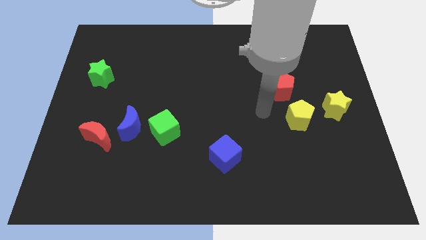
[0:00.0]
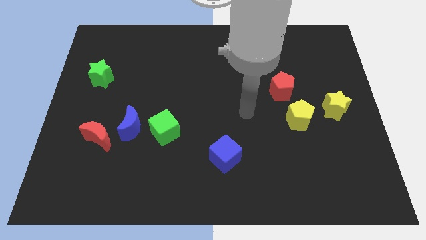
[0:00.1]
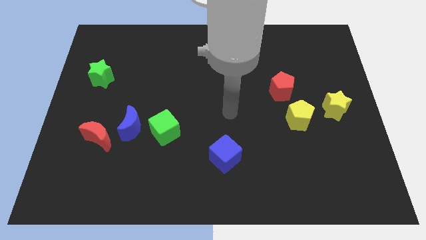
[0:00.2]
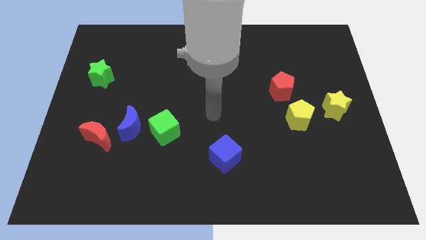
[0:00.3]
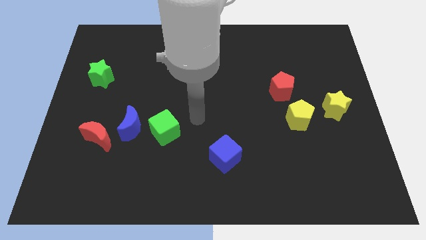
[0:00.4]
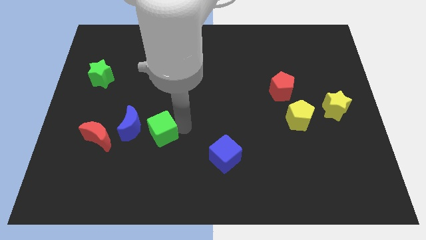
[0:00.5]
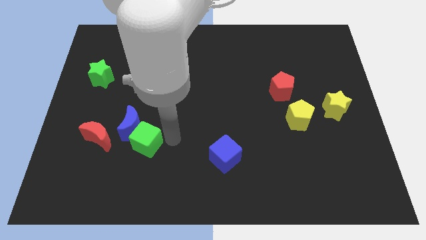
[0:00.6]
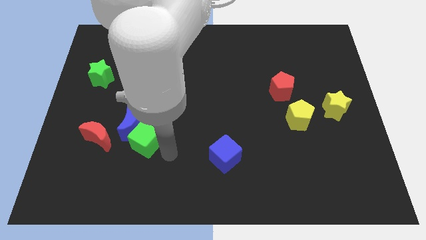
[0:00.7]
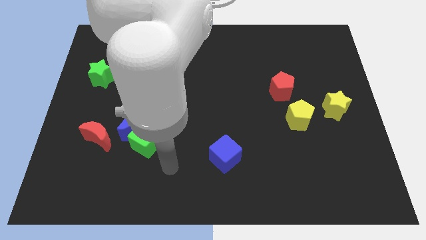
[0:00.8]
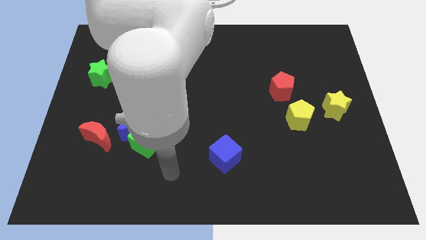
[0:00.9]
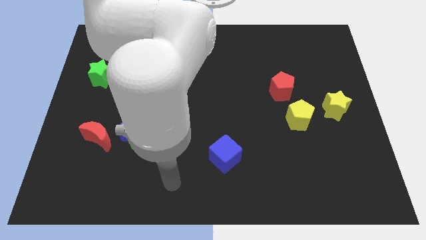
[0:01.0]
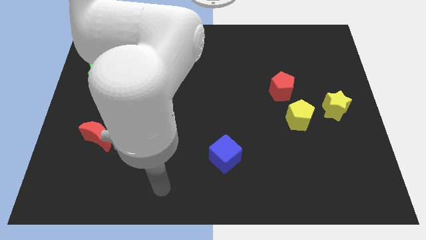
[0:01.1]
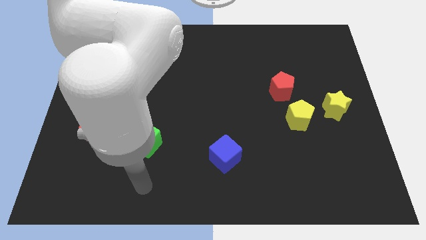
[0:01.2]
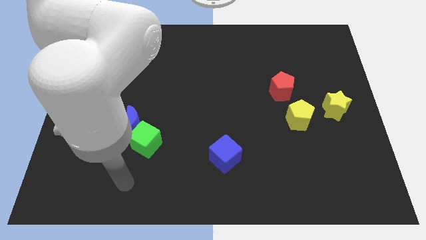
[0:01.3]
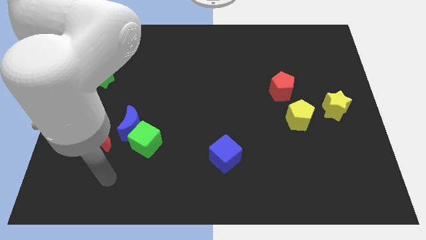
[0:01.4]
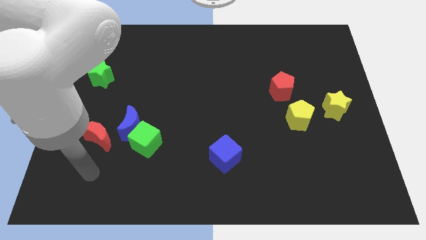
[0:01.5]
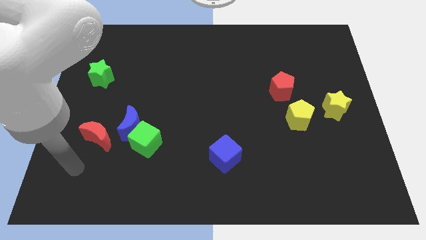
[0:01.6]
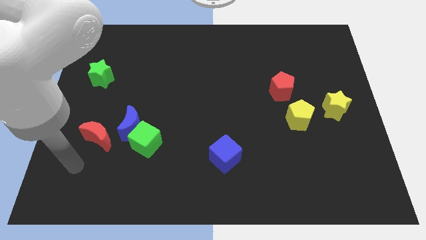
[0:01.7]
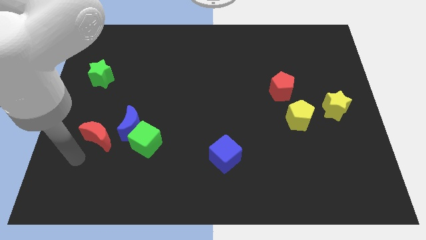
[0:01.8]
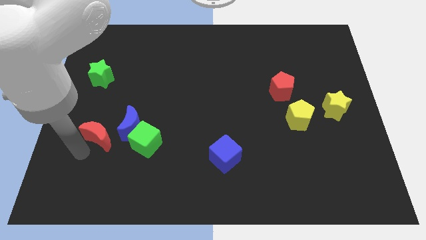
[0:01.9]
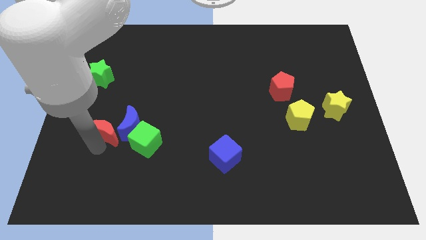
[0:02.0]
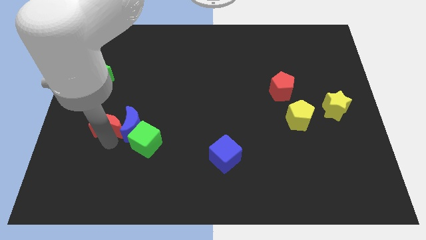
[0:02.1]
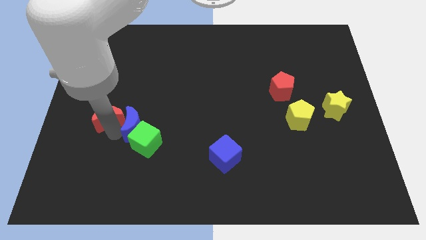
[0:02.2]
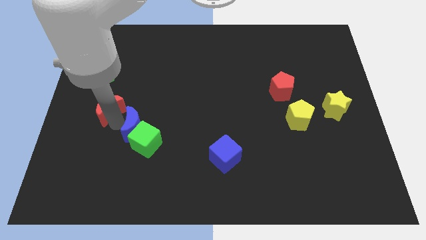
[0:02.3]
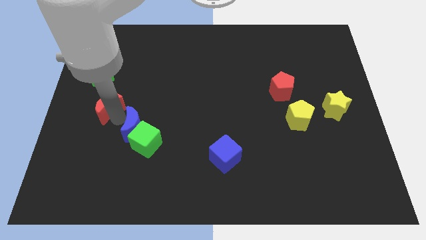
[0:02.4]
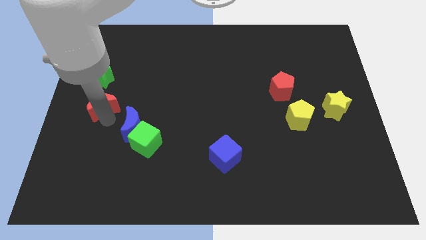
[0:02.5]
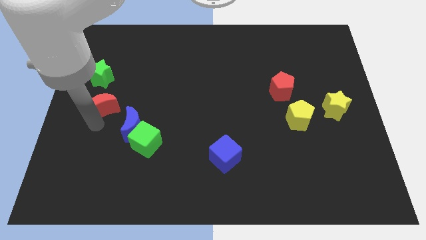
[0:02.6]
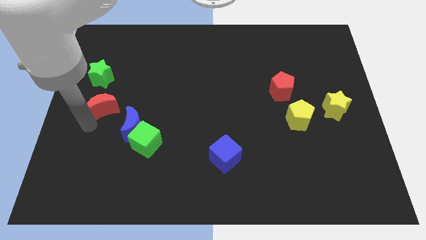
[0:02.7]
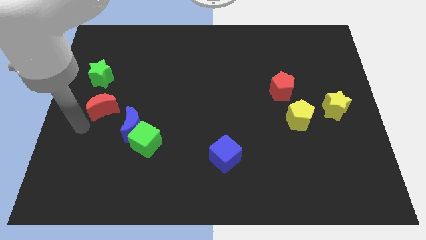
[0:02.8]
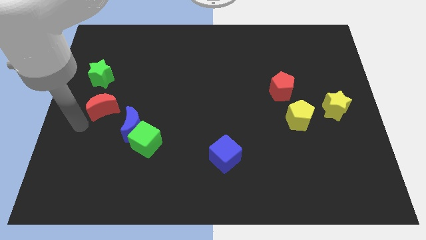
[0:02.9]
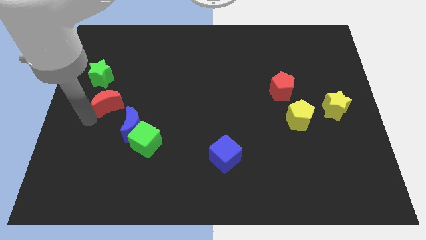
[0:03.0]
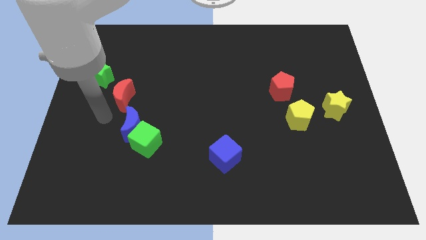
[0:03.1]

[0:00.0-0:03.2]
place the green cube and the red crescent on either sides of the blue crescent

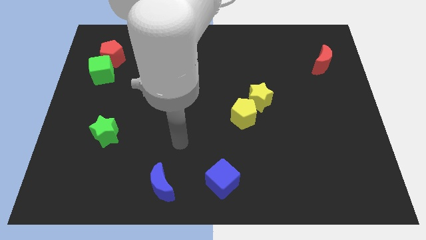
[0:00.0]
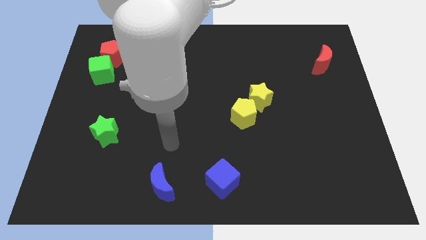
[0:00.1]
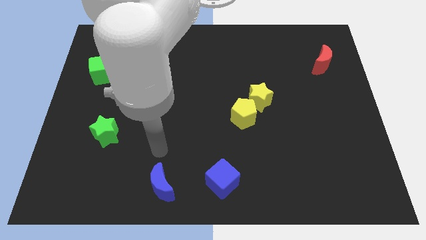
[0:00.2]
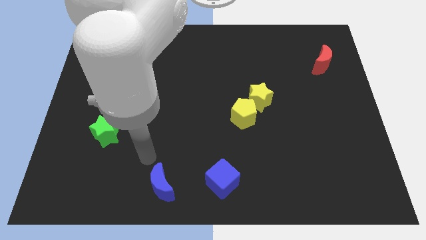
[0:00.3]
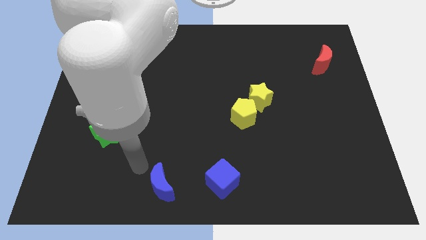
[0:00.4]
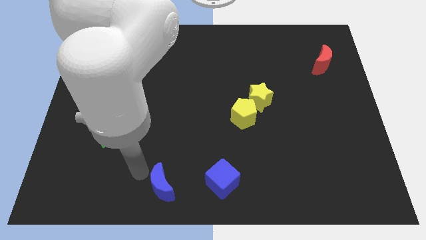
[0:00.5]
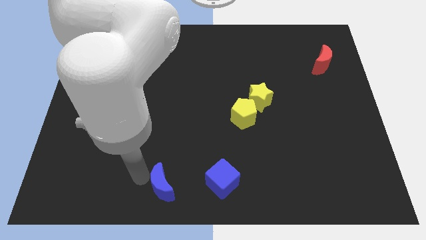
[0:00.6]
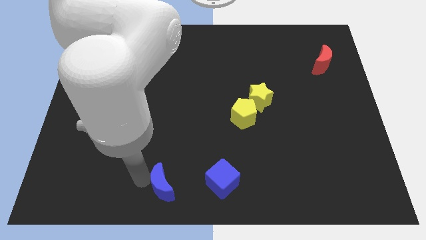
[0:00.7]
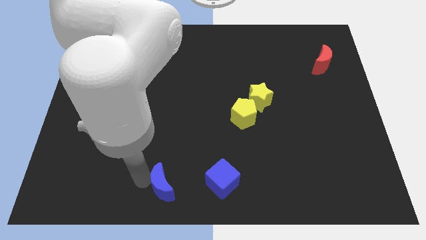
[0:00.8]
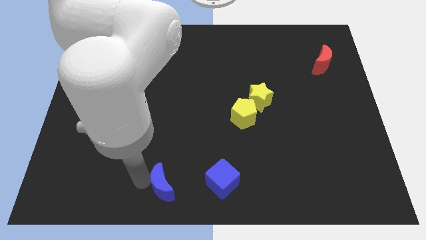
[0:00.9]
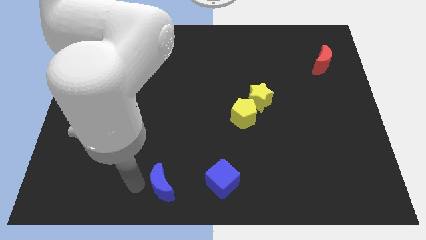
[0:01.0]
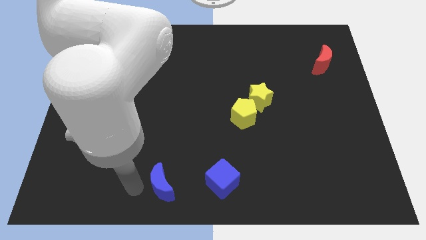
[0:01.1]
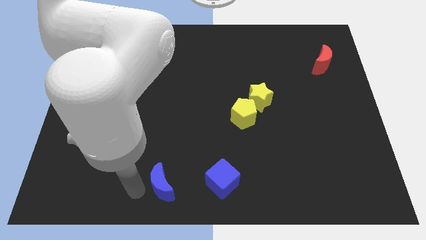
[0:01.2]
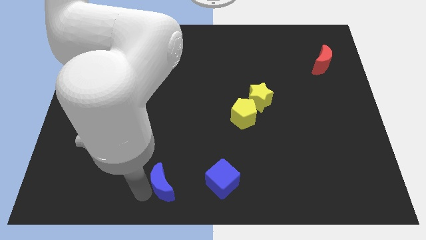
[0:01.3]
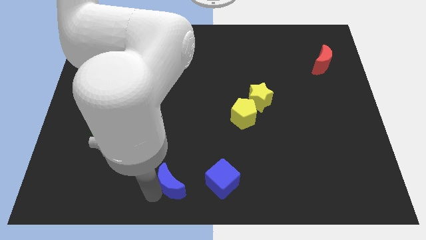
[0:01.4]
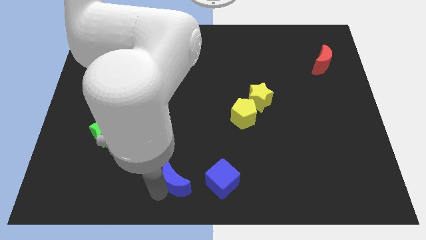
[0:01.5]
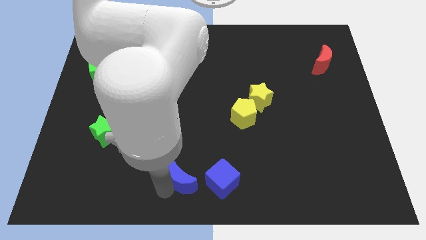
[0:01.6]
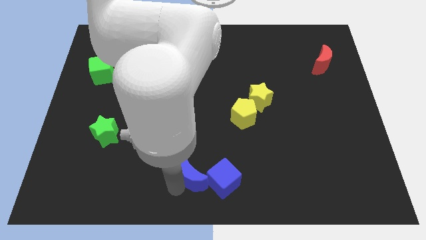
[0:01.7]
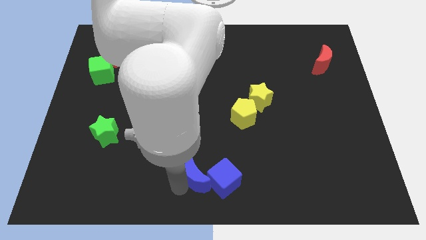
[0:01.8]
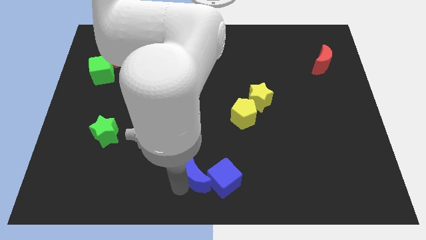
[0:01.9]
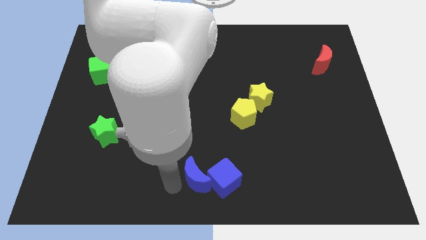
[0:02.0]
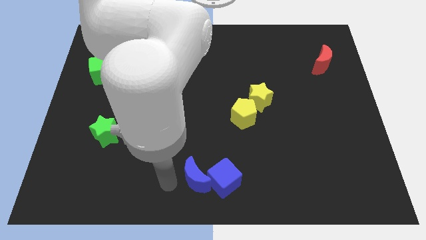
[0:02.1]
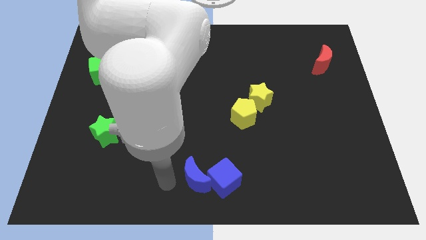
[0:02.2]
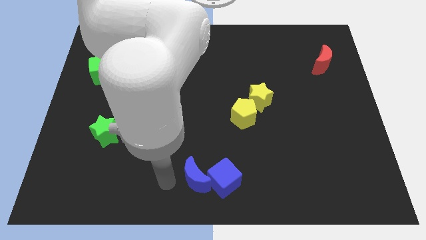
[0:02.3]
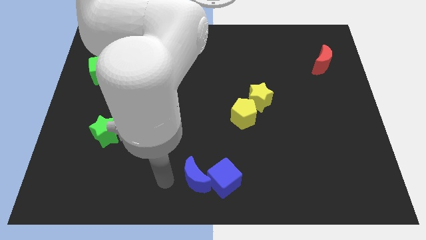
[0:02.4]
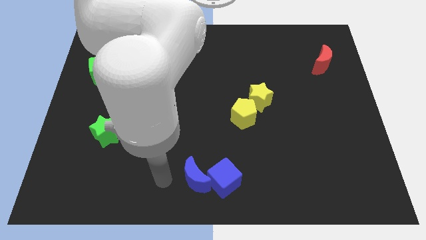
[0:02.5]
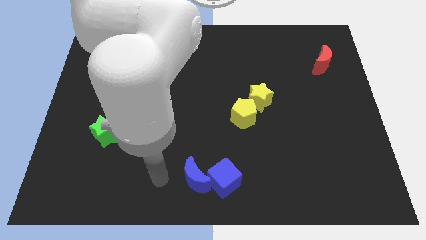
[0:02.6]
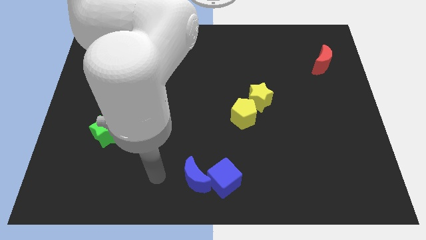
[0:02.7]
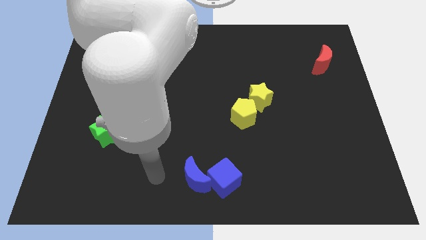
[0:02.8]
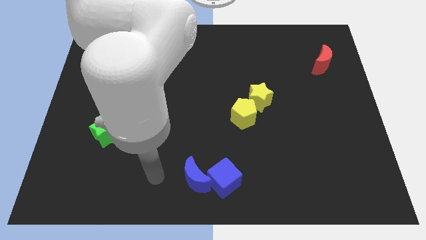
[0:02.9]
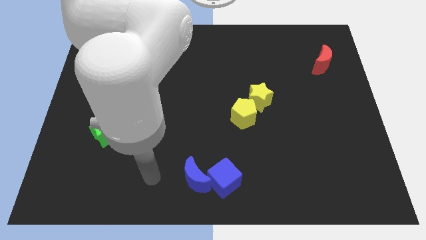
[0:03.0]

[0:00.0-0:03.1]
push blue moon into the blue cube

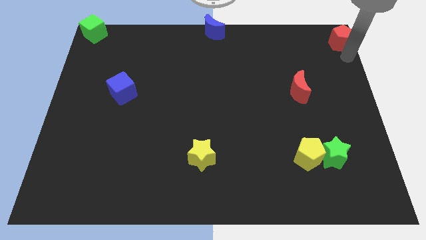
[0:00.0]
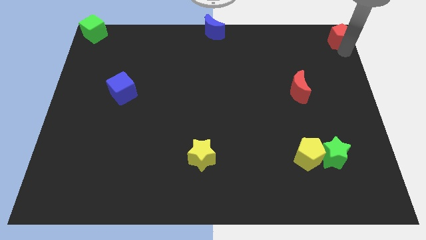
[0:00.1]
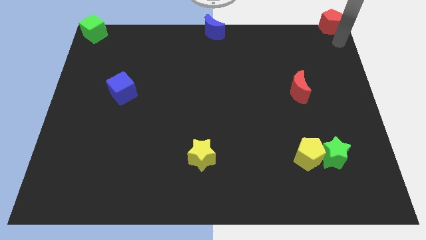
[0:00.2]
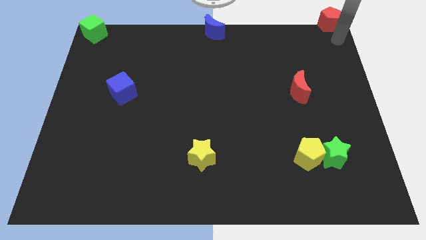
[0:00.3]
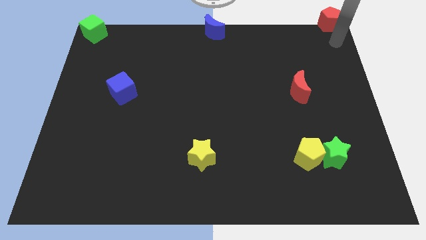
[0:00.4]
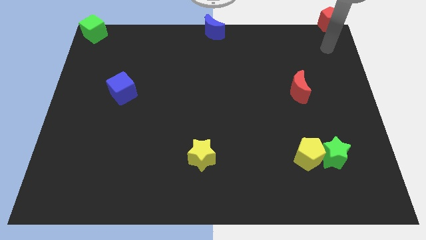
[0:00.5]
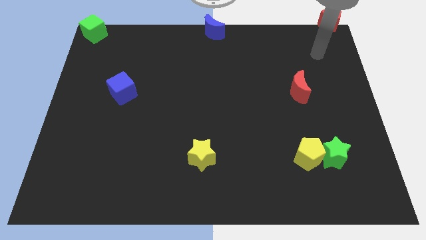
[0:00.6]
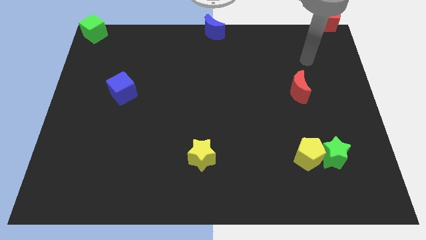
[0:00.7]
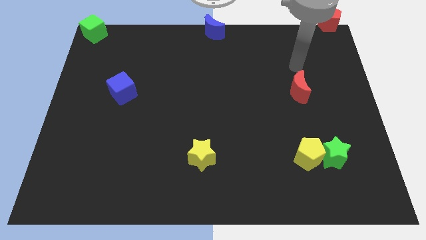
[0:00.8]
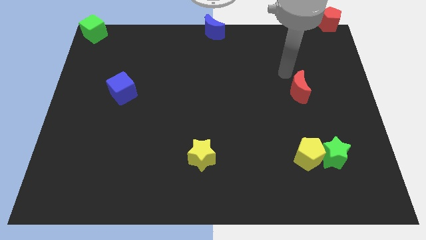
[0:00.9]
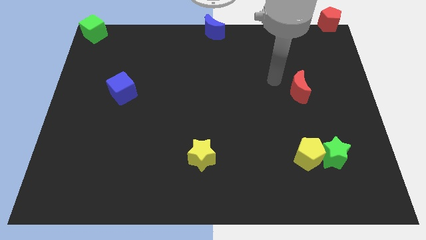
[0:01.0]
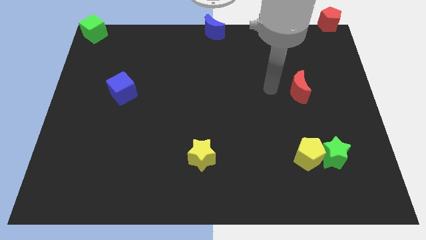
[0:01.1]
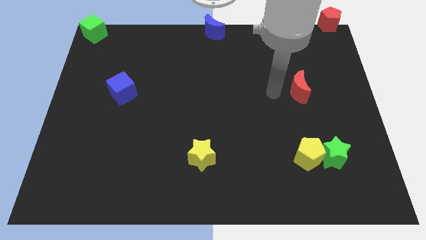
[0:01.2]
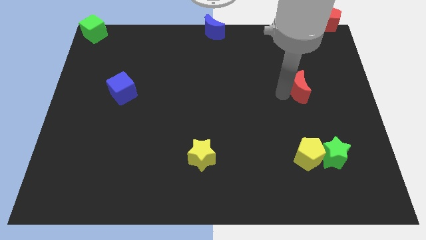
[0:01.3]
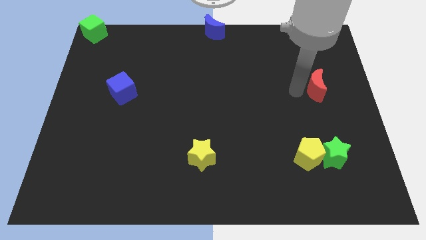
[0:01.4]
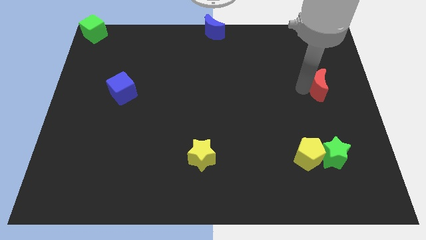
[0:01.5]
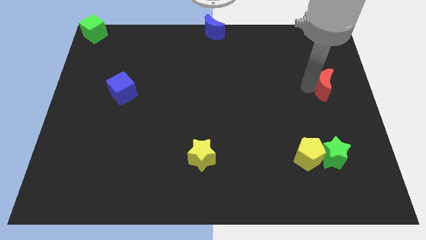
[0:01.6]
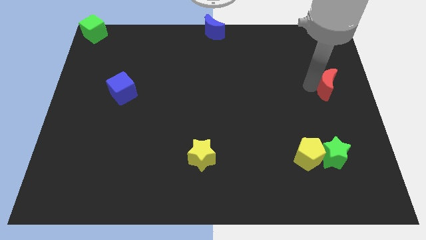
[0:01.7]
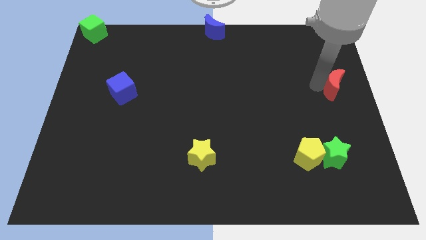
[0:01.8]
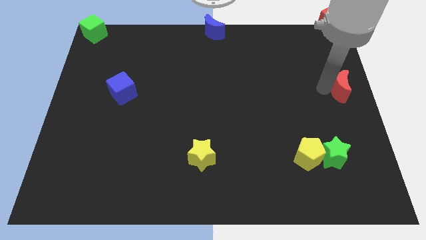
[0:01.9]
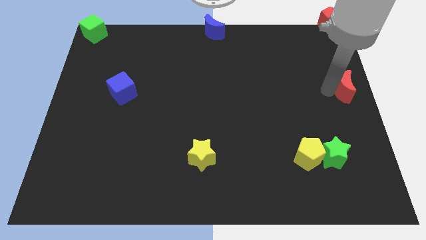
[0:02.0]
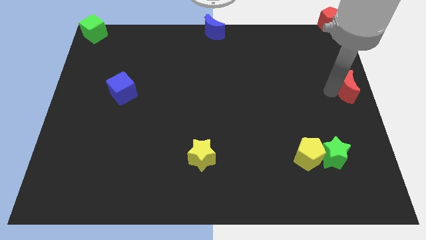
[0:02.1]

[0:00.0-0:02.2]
push red moon to the right centre of board

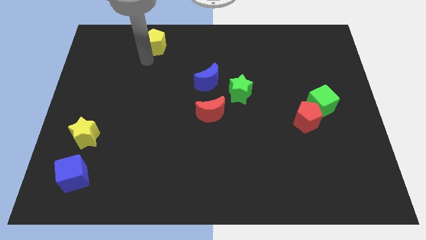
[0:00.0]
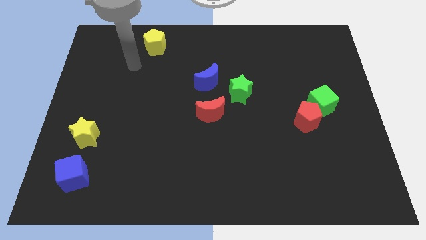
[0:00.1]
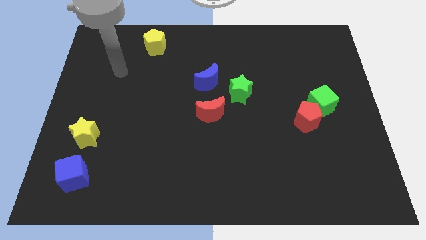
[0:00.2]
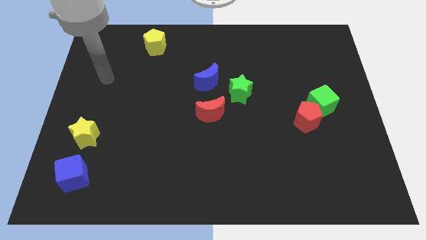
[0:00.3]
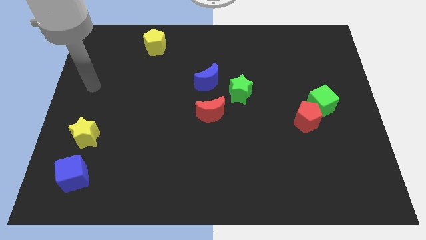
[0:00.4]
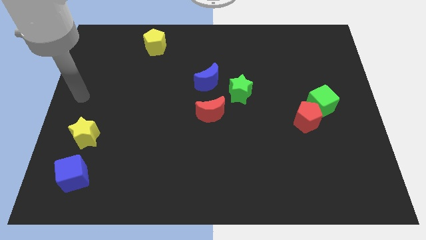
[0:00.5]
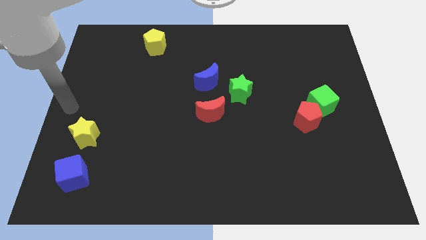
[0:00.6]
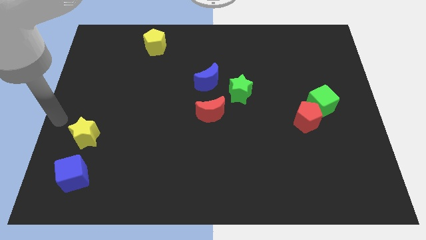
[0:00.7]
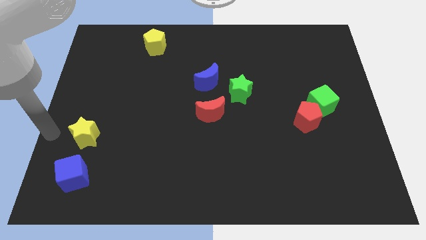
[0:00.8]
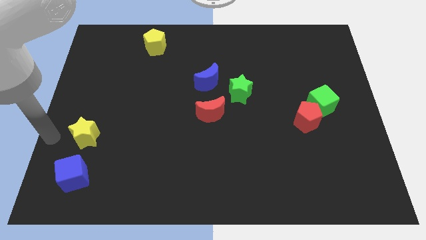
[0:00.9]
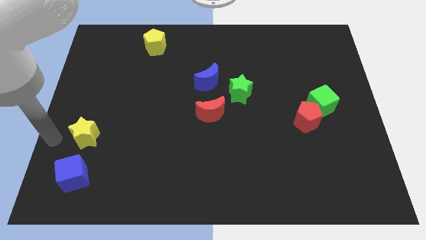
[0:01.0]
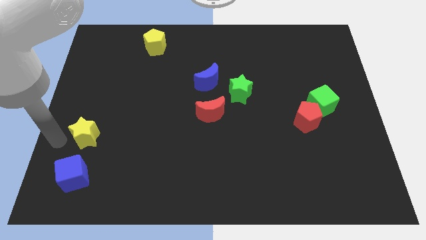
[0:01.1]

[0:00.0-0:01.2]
go away from the yellow pentagon
